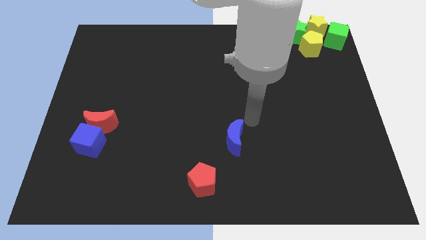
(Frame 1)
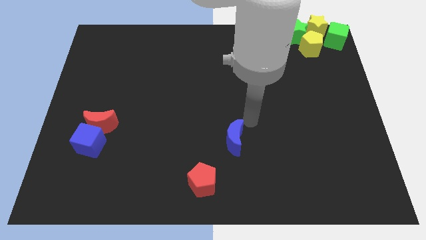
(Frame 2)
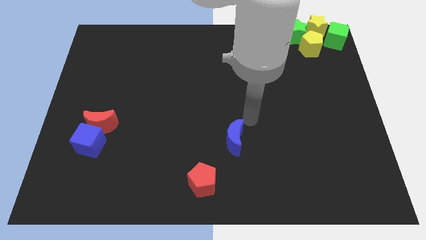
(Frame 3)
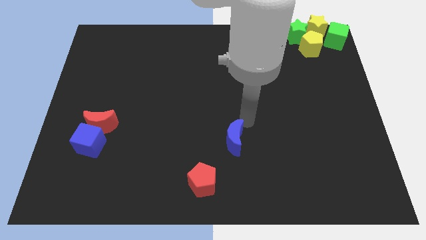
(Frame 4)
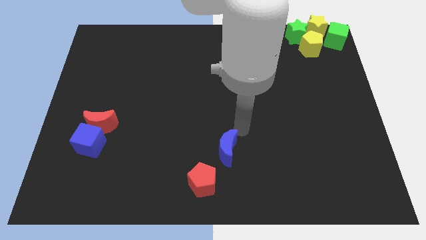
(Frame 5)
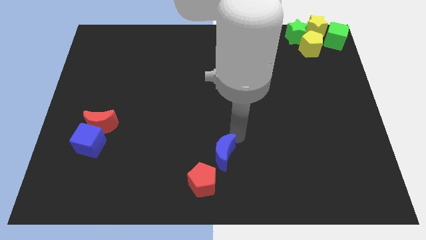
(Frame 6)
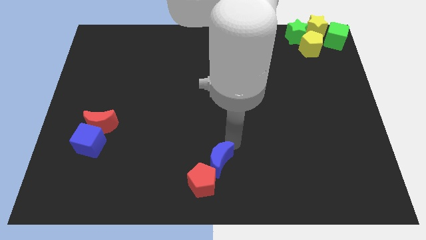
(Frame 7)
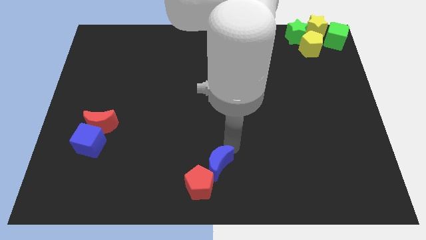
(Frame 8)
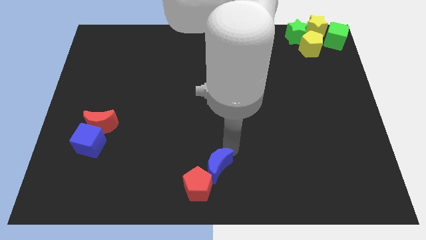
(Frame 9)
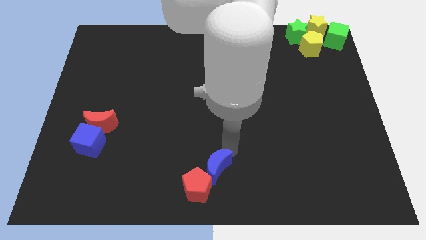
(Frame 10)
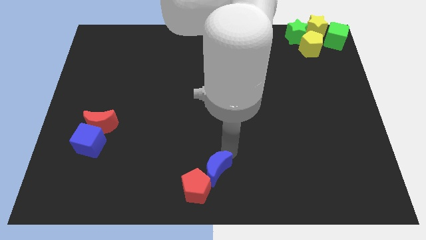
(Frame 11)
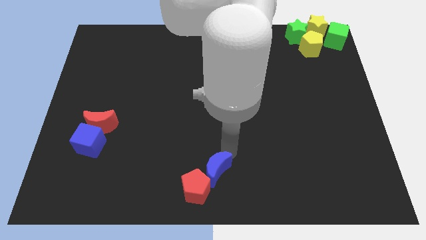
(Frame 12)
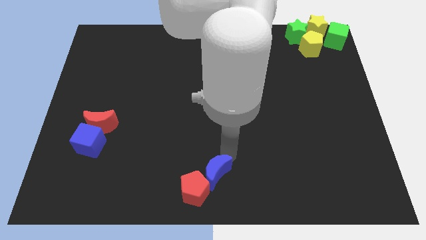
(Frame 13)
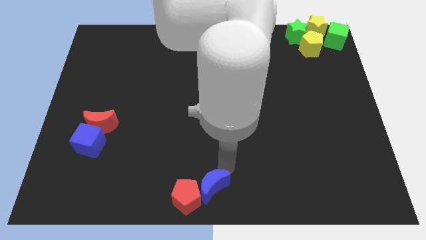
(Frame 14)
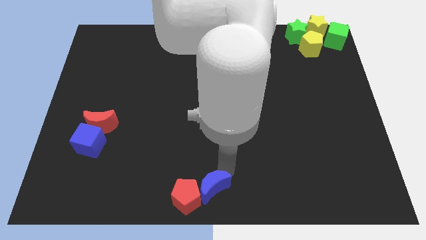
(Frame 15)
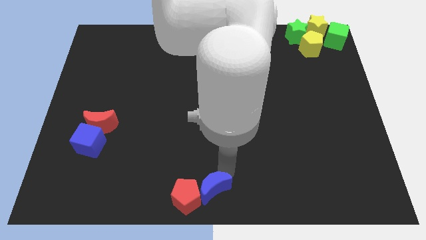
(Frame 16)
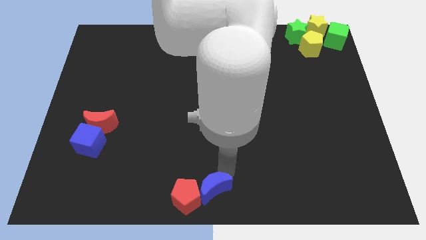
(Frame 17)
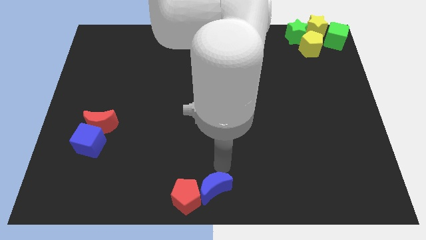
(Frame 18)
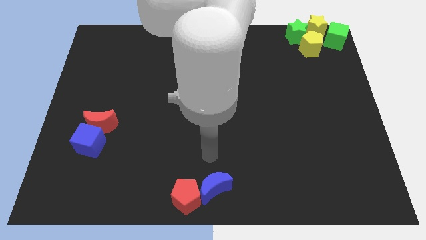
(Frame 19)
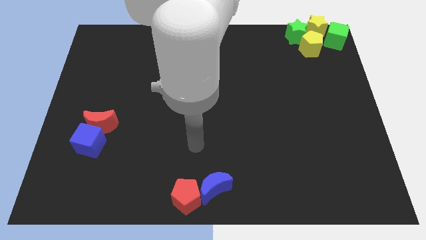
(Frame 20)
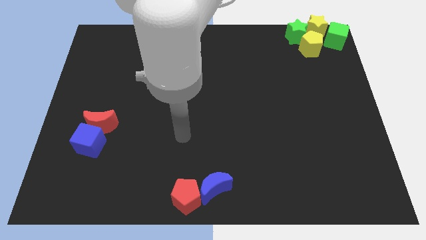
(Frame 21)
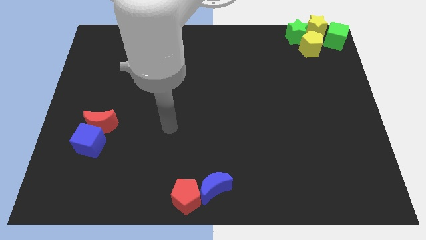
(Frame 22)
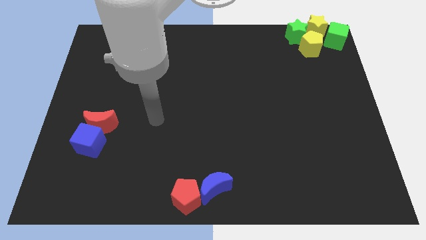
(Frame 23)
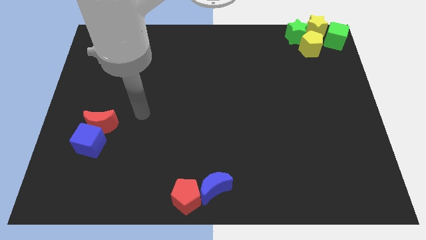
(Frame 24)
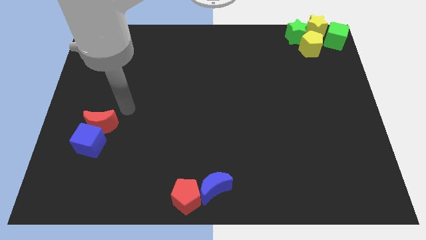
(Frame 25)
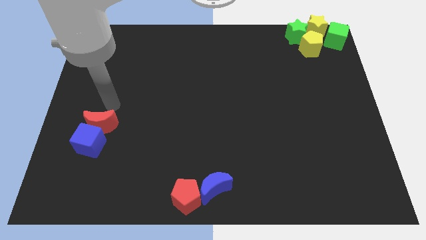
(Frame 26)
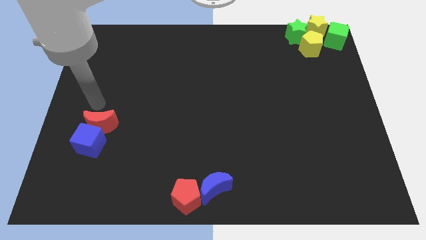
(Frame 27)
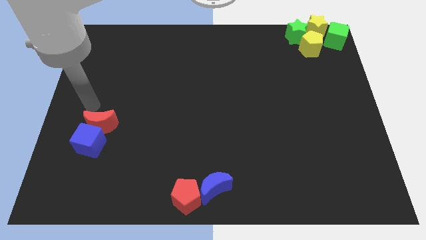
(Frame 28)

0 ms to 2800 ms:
push the blue crescent to the bottom center

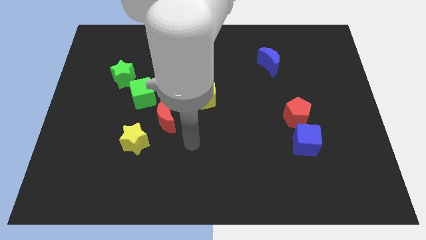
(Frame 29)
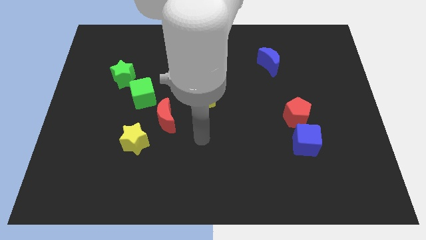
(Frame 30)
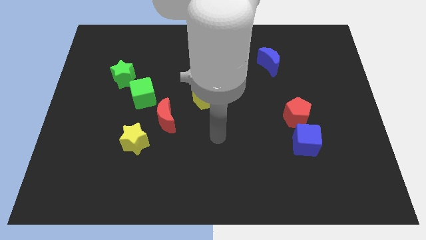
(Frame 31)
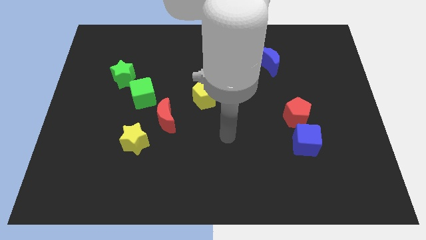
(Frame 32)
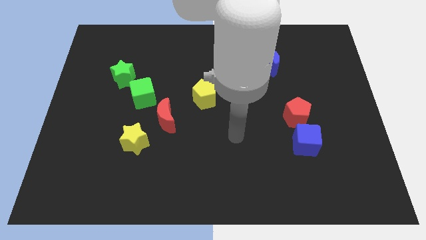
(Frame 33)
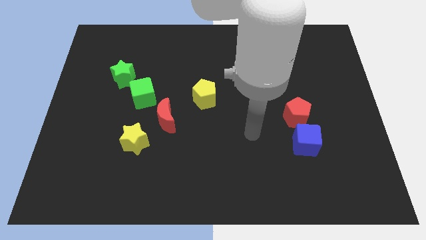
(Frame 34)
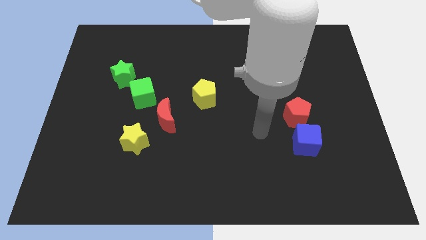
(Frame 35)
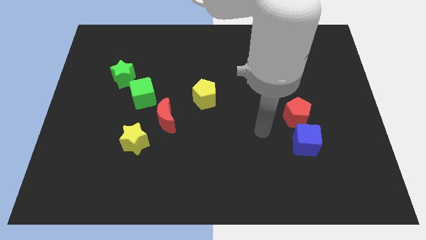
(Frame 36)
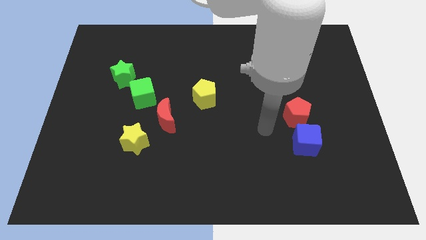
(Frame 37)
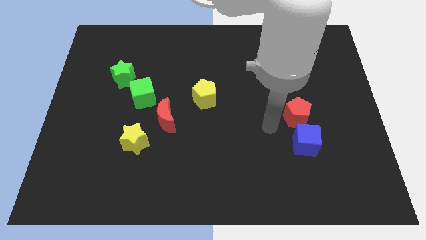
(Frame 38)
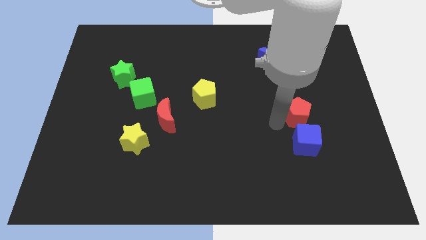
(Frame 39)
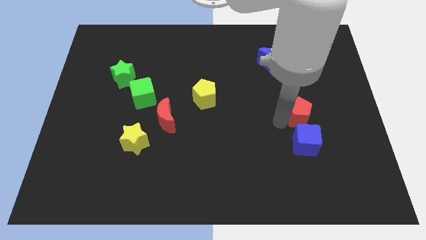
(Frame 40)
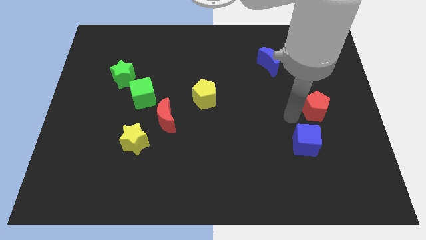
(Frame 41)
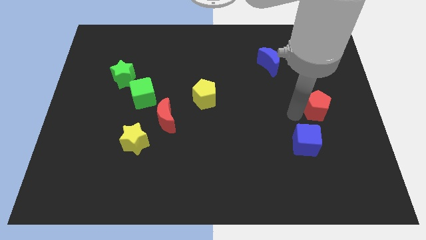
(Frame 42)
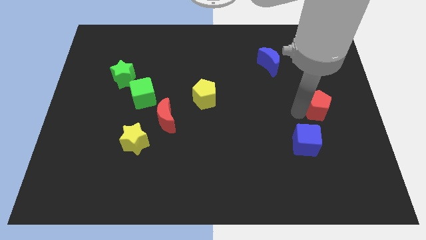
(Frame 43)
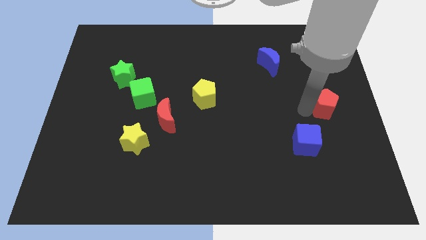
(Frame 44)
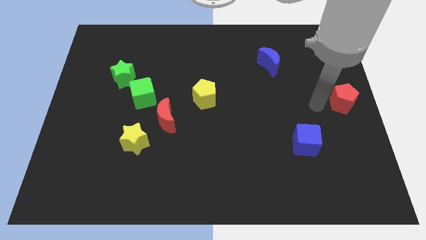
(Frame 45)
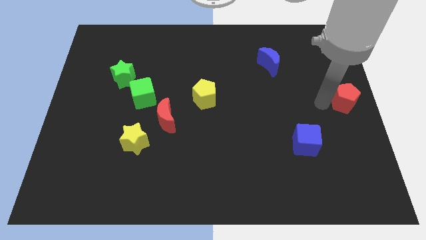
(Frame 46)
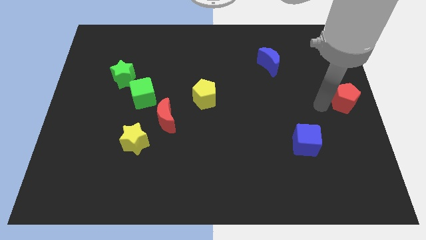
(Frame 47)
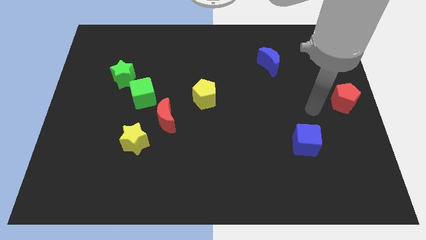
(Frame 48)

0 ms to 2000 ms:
move the red pentagon away from the blue cube

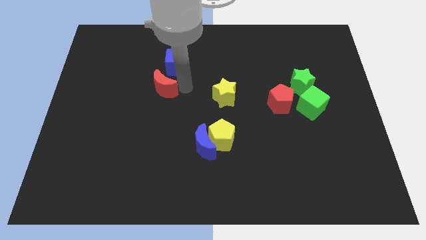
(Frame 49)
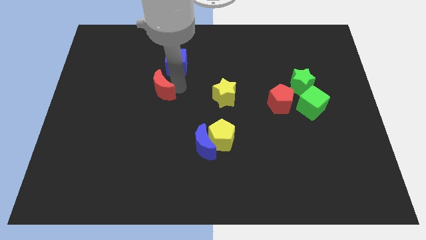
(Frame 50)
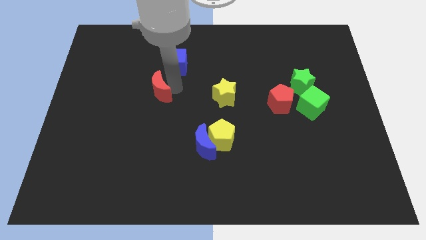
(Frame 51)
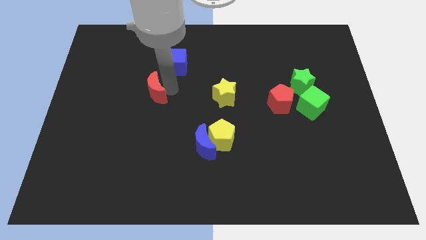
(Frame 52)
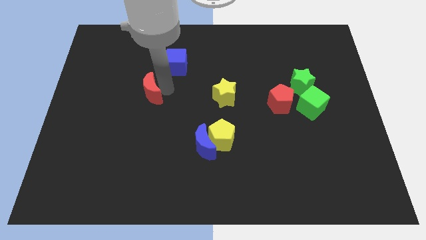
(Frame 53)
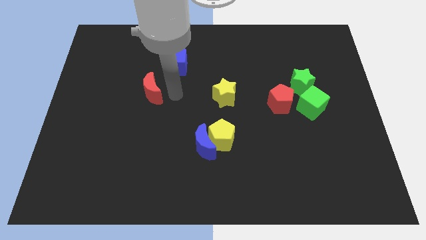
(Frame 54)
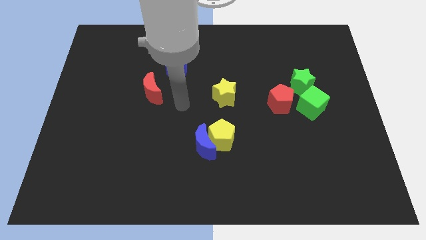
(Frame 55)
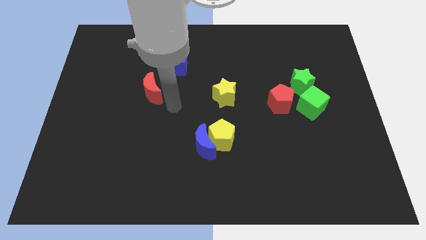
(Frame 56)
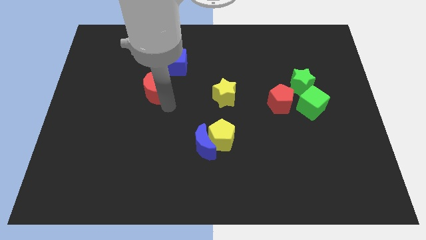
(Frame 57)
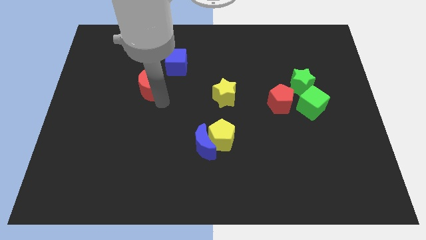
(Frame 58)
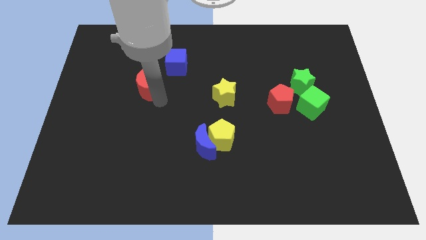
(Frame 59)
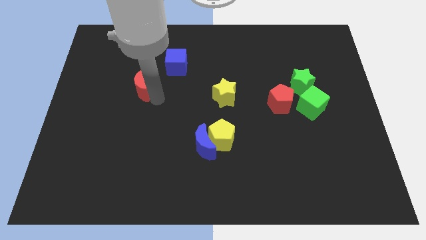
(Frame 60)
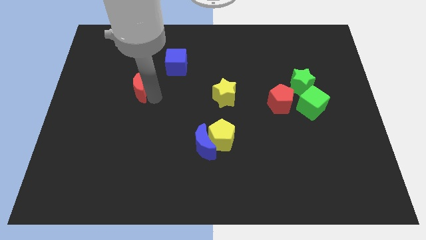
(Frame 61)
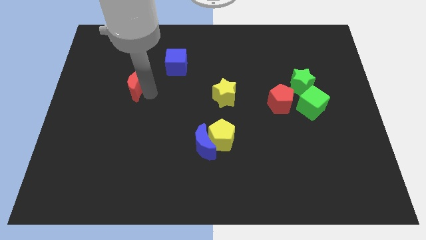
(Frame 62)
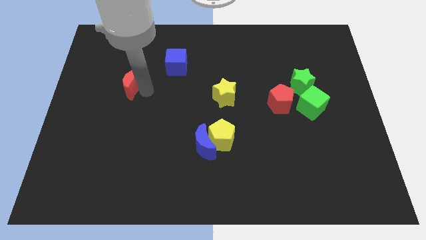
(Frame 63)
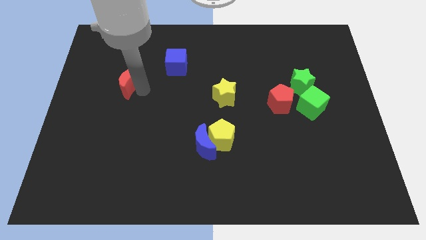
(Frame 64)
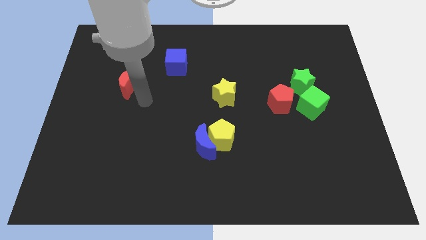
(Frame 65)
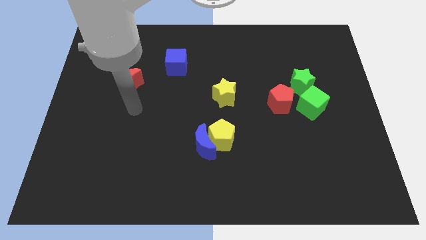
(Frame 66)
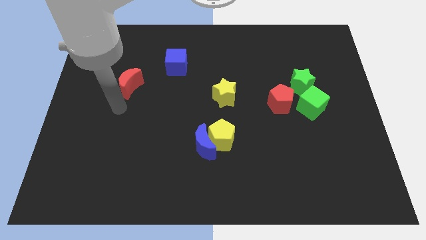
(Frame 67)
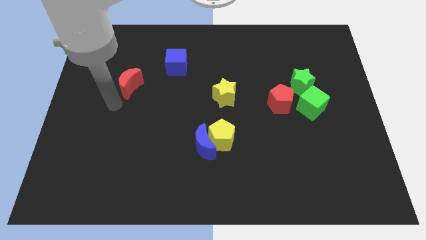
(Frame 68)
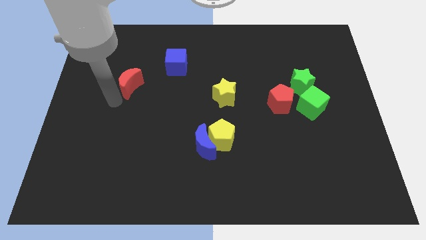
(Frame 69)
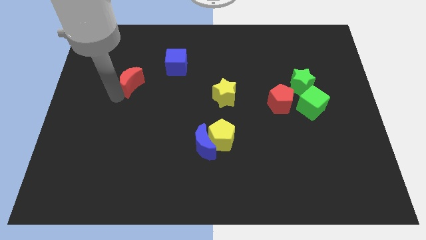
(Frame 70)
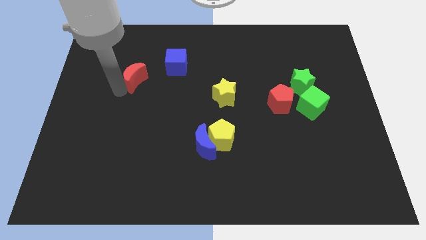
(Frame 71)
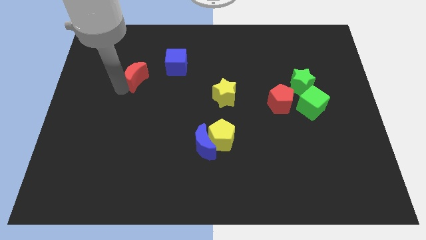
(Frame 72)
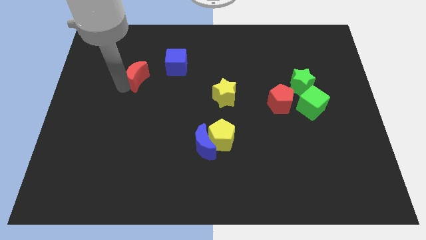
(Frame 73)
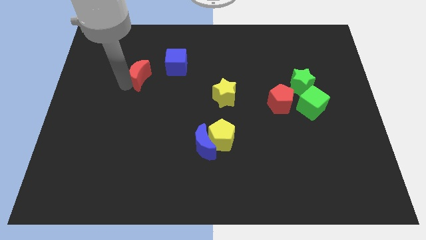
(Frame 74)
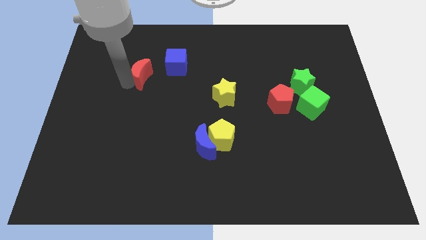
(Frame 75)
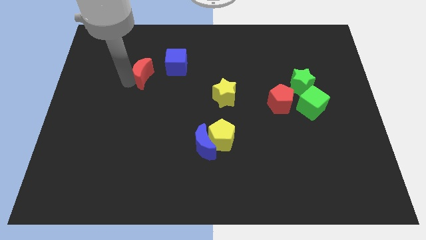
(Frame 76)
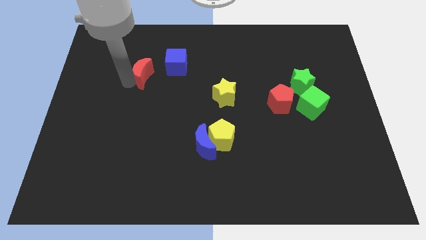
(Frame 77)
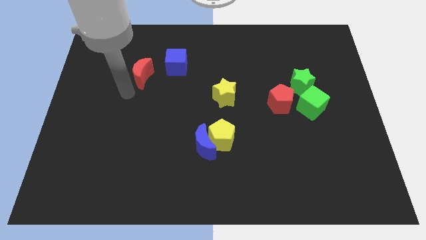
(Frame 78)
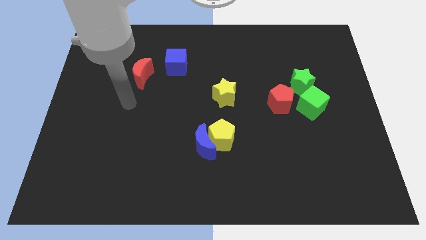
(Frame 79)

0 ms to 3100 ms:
move the red crescent to the bottom left of the blue cube

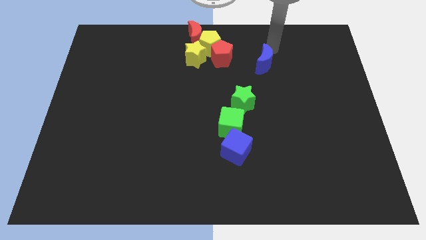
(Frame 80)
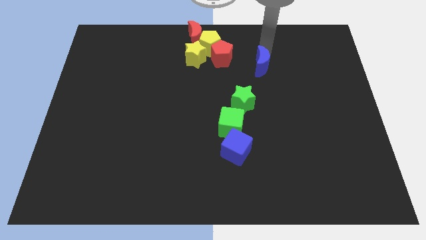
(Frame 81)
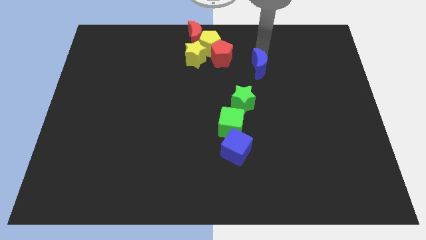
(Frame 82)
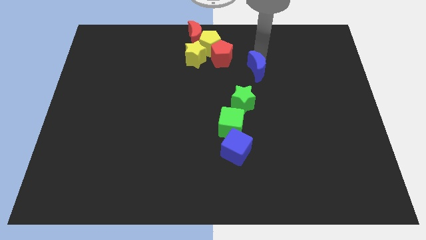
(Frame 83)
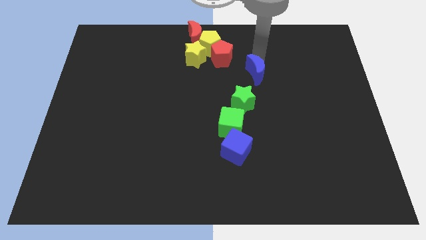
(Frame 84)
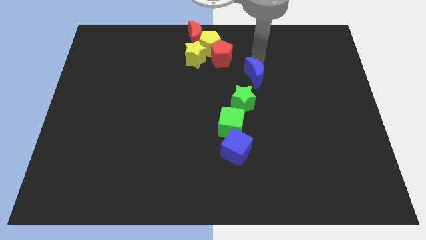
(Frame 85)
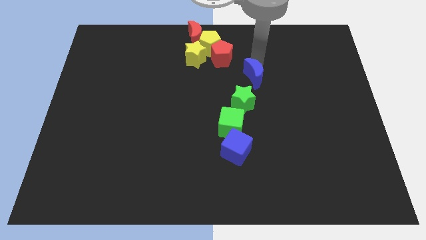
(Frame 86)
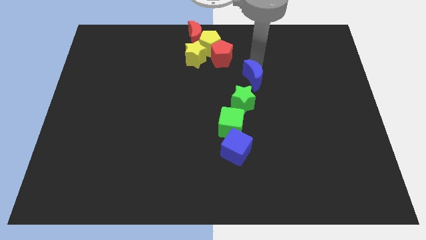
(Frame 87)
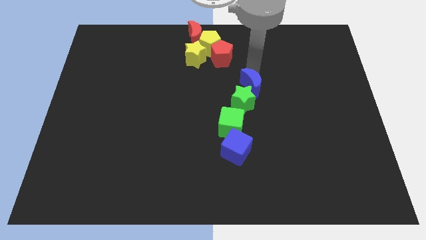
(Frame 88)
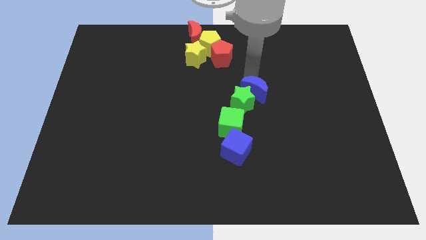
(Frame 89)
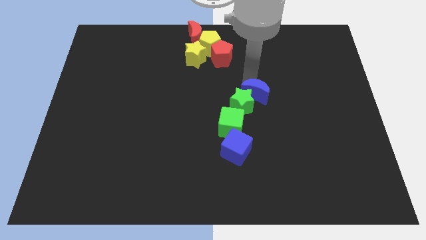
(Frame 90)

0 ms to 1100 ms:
push the blue crescent into the top side of the green star
